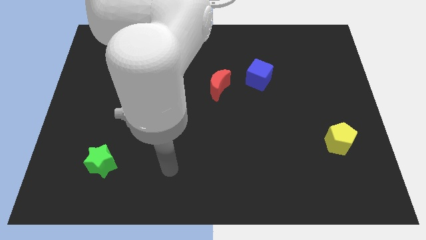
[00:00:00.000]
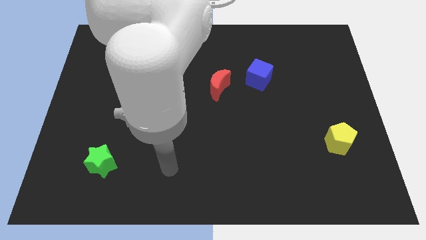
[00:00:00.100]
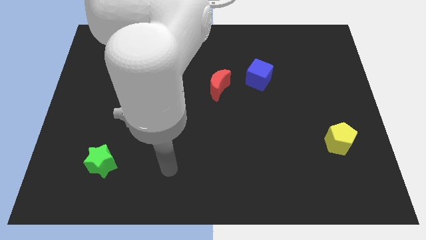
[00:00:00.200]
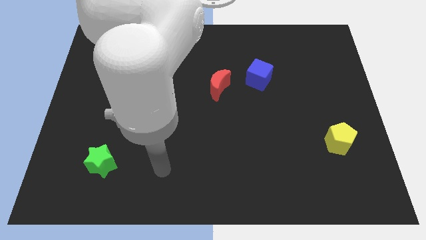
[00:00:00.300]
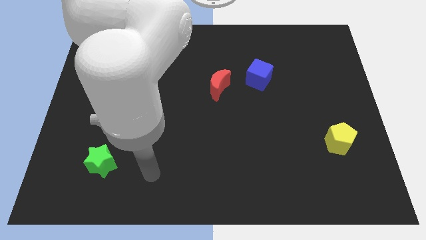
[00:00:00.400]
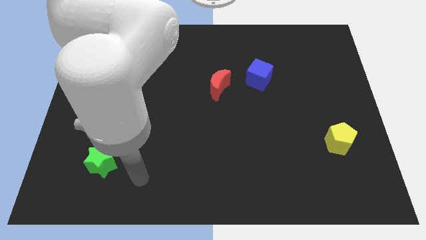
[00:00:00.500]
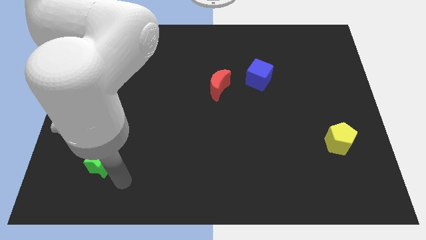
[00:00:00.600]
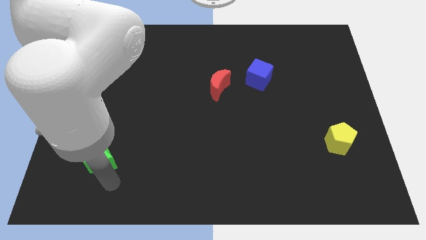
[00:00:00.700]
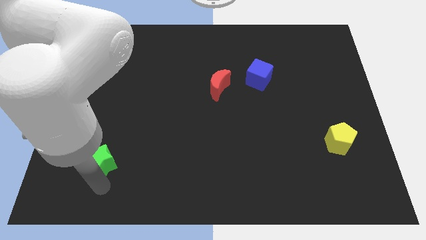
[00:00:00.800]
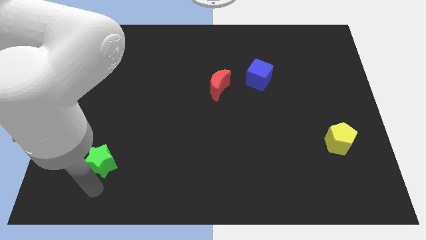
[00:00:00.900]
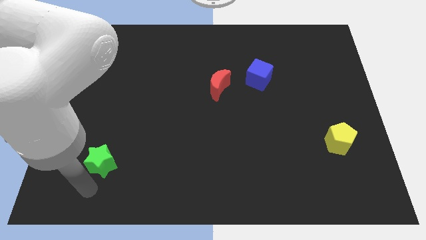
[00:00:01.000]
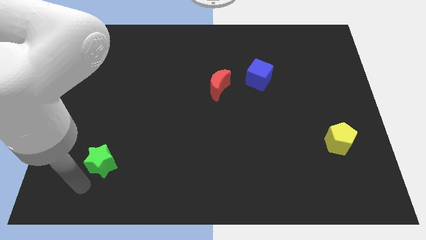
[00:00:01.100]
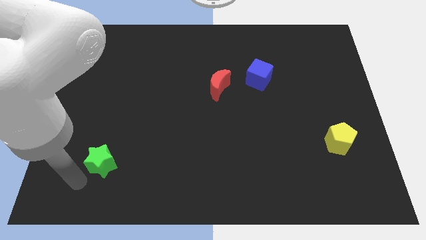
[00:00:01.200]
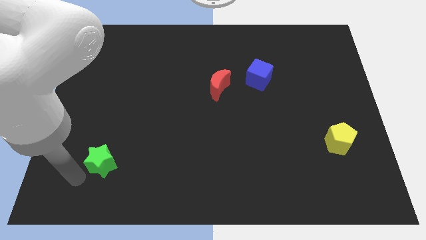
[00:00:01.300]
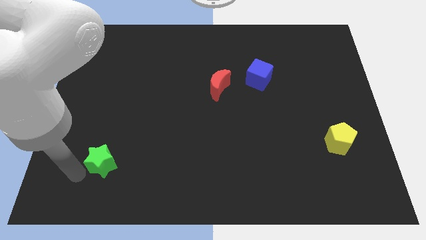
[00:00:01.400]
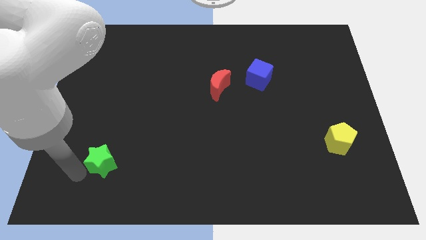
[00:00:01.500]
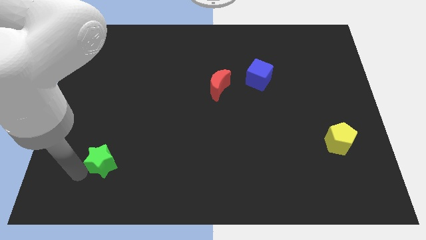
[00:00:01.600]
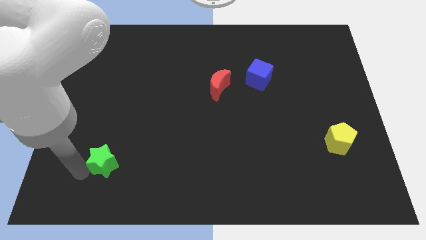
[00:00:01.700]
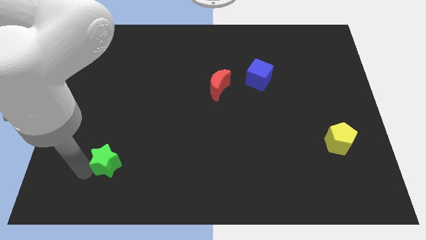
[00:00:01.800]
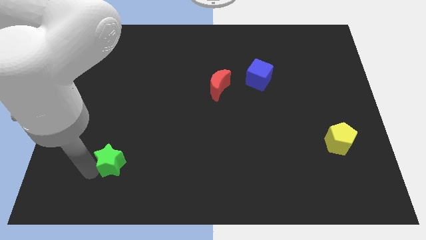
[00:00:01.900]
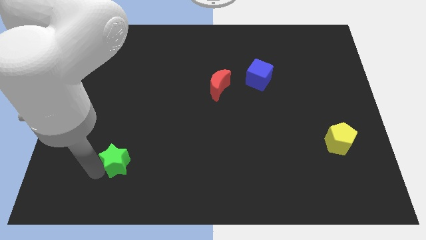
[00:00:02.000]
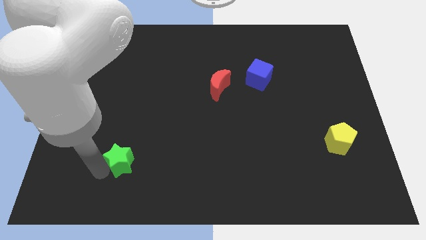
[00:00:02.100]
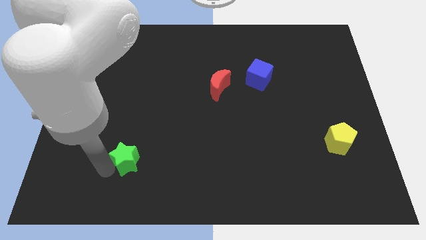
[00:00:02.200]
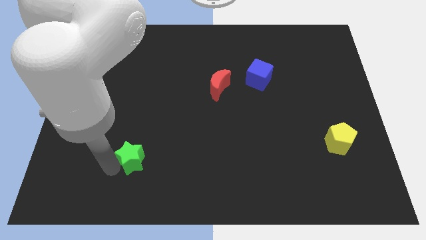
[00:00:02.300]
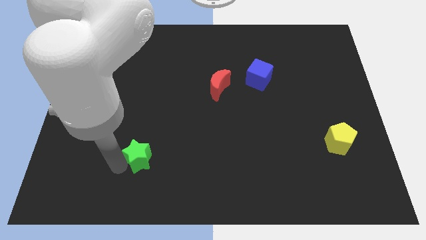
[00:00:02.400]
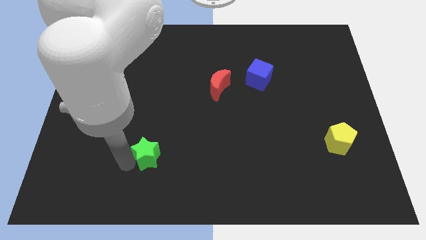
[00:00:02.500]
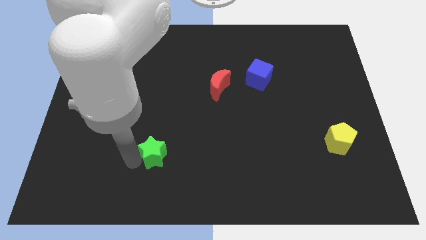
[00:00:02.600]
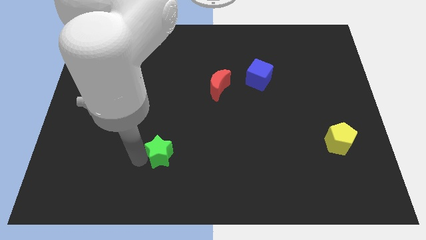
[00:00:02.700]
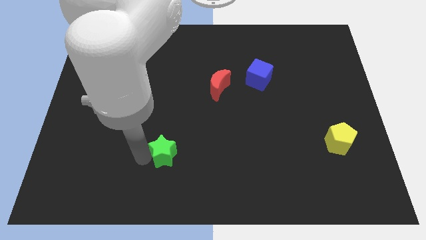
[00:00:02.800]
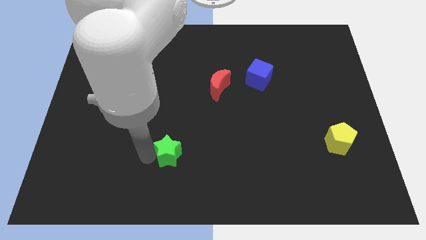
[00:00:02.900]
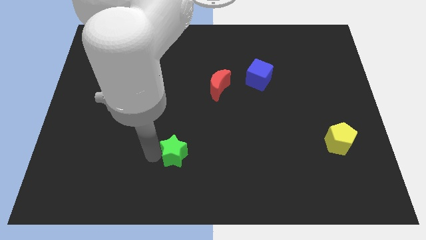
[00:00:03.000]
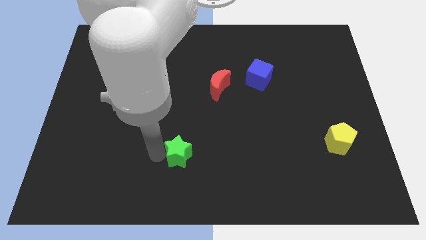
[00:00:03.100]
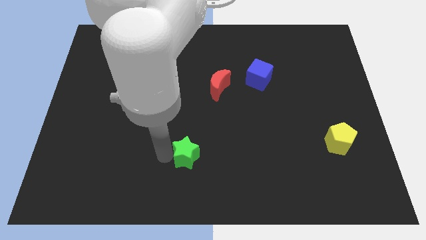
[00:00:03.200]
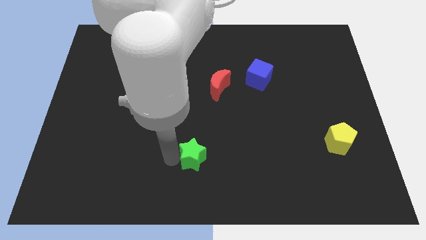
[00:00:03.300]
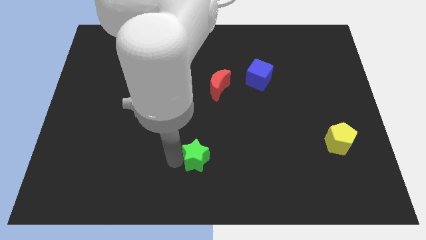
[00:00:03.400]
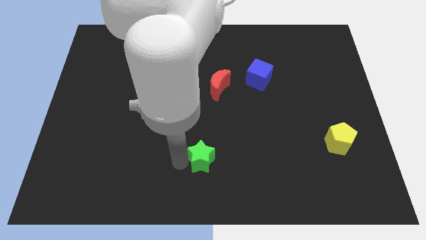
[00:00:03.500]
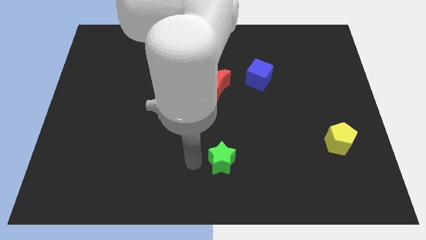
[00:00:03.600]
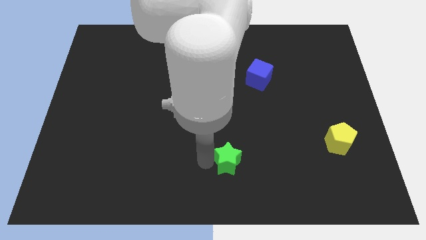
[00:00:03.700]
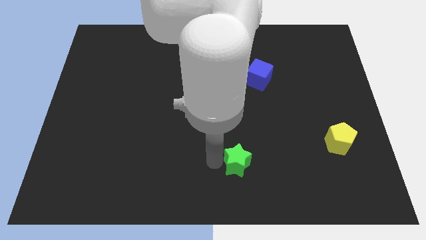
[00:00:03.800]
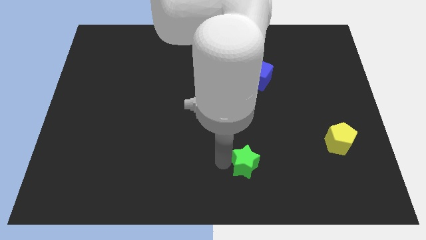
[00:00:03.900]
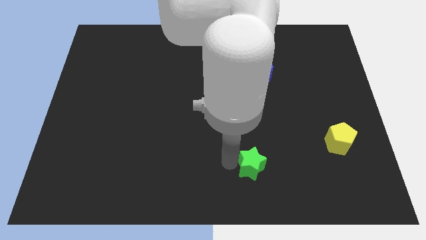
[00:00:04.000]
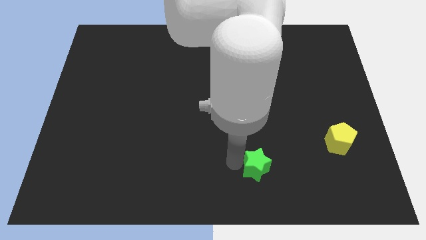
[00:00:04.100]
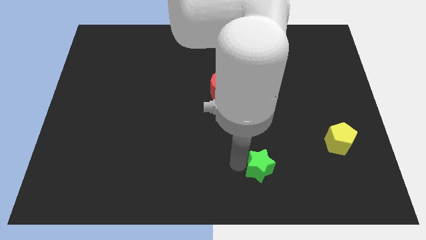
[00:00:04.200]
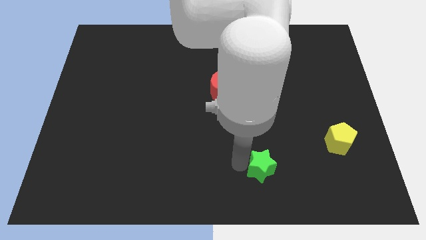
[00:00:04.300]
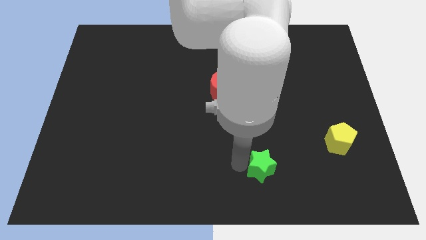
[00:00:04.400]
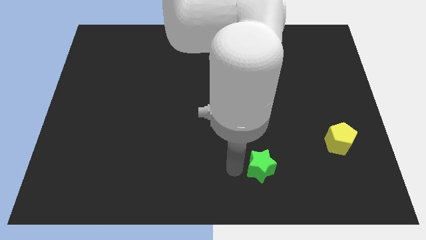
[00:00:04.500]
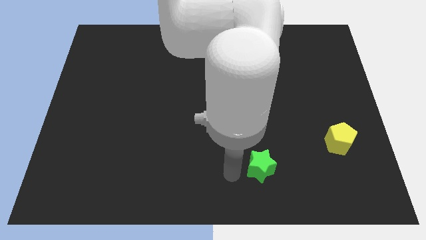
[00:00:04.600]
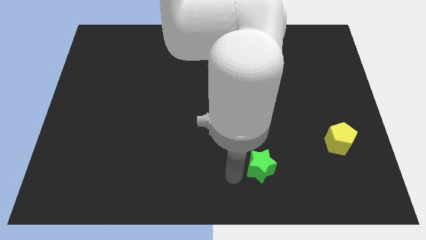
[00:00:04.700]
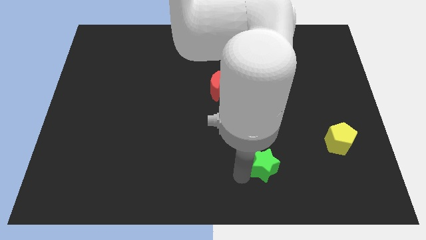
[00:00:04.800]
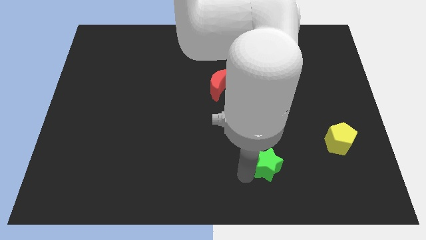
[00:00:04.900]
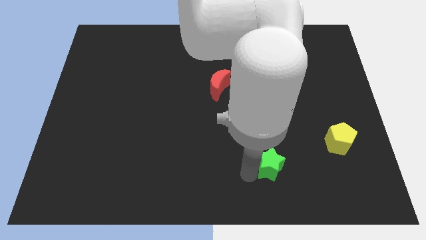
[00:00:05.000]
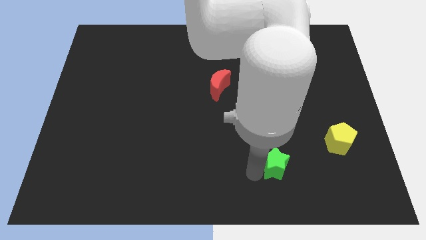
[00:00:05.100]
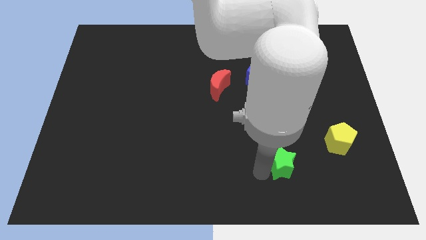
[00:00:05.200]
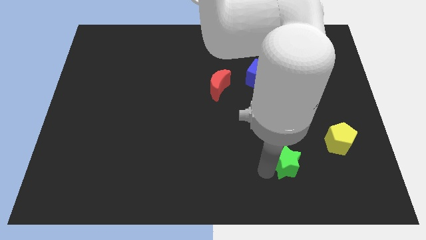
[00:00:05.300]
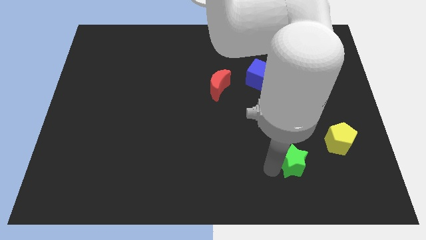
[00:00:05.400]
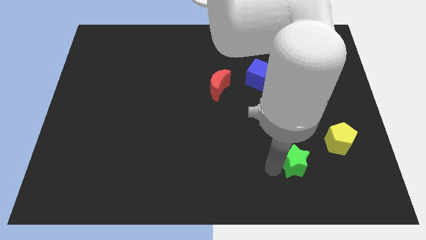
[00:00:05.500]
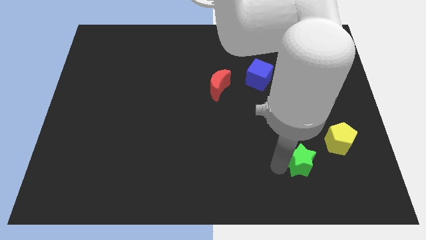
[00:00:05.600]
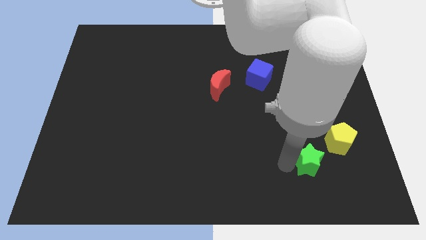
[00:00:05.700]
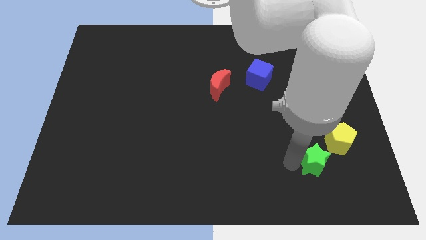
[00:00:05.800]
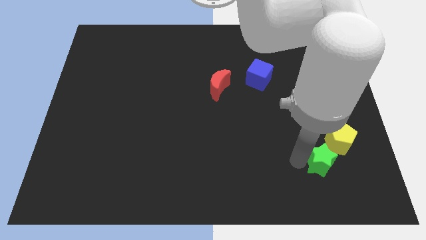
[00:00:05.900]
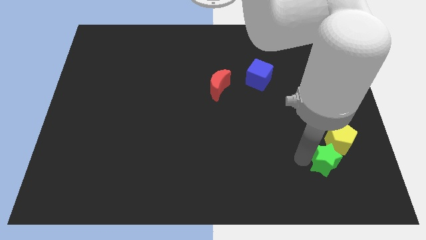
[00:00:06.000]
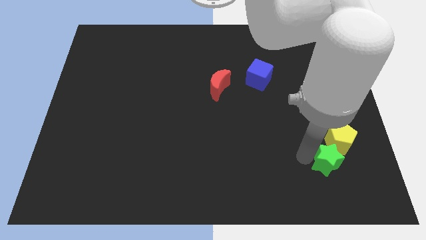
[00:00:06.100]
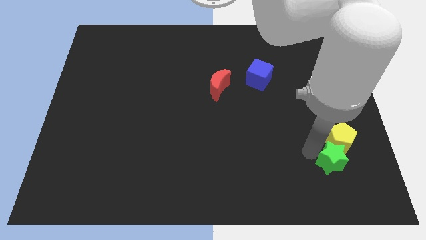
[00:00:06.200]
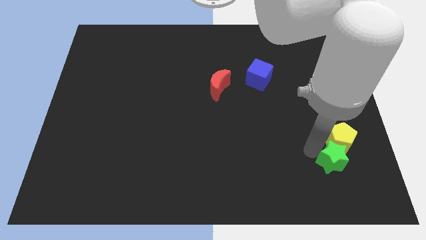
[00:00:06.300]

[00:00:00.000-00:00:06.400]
put the green star close to the yellow block

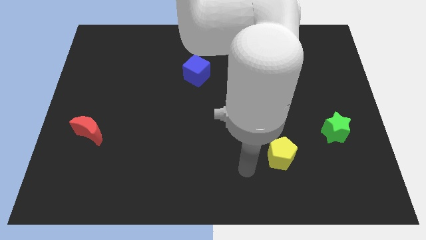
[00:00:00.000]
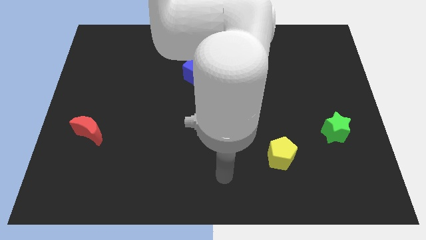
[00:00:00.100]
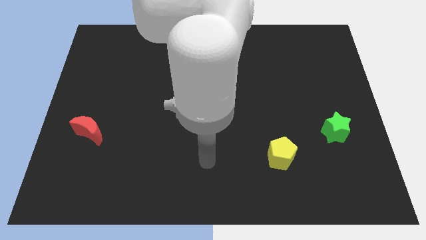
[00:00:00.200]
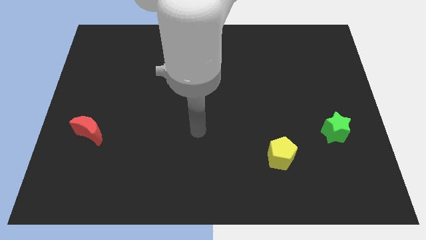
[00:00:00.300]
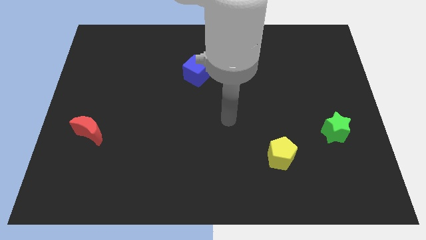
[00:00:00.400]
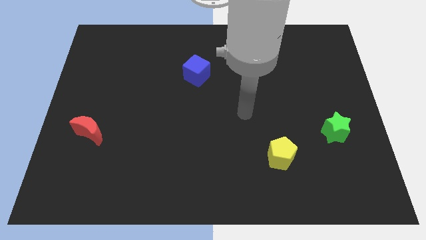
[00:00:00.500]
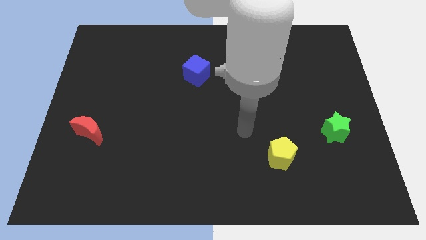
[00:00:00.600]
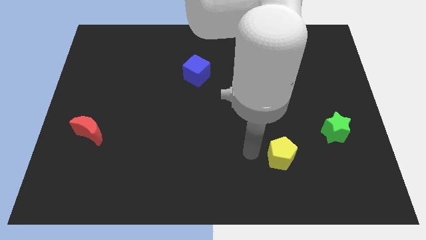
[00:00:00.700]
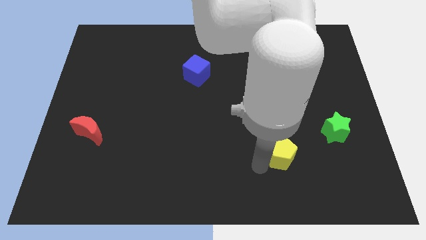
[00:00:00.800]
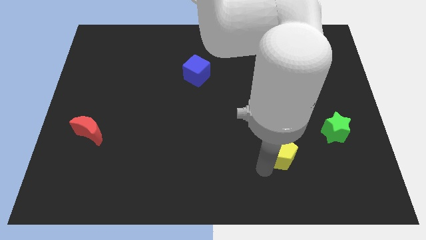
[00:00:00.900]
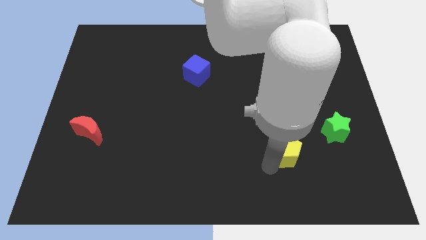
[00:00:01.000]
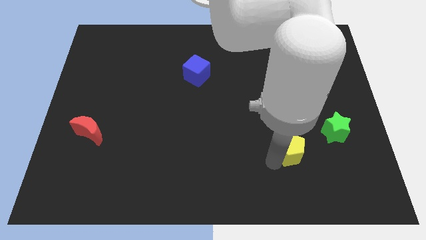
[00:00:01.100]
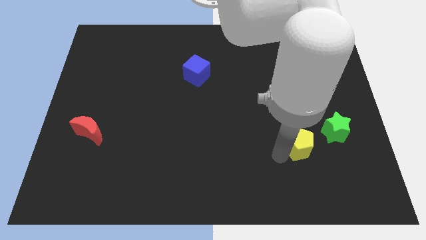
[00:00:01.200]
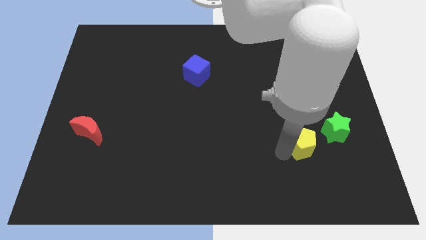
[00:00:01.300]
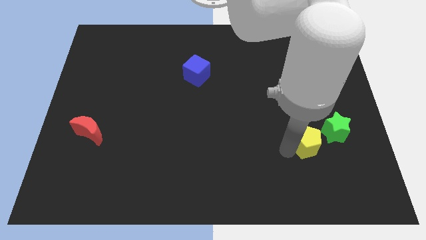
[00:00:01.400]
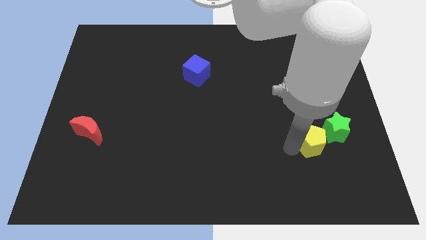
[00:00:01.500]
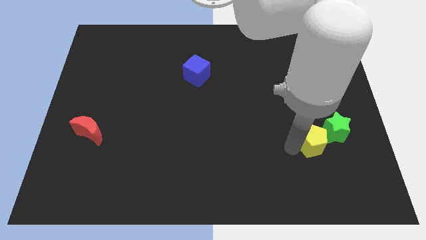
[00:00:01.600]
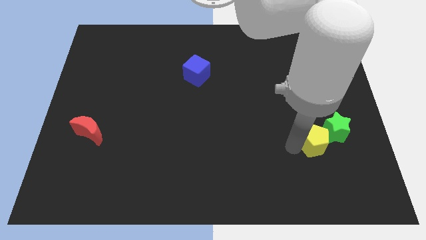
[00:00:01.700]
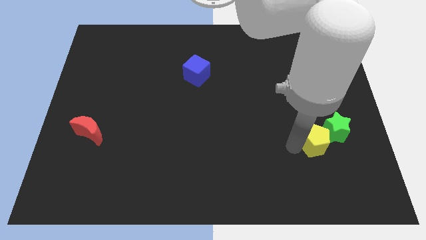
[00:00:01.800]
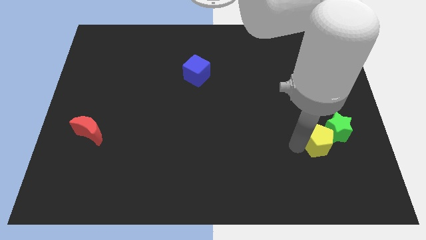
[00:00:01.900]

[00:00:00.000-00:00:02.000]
move the pentagon towards the star

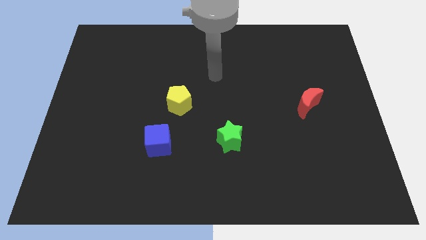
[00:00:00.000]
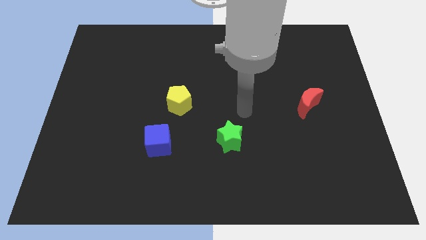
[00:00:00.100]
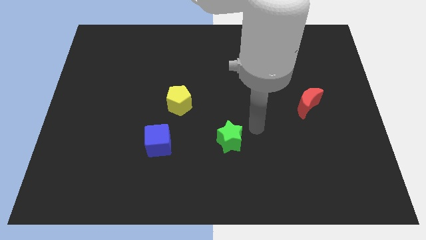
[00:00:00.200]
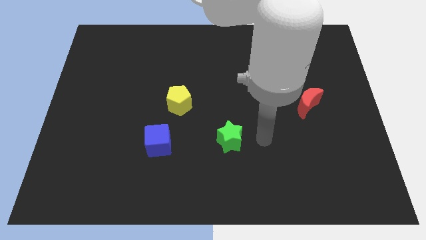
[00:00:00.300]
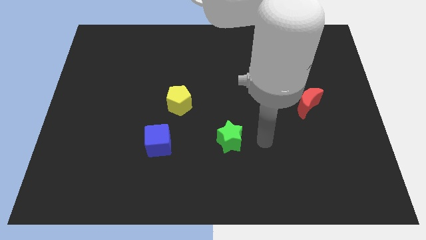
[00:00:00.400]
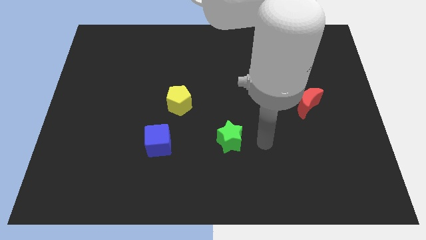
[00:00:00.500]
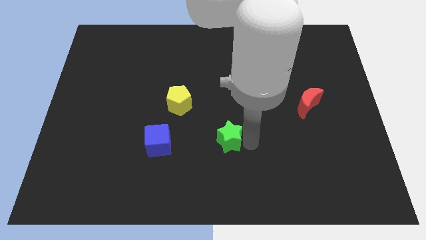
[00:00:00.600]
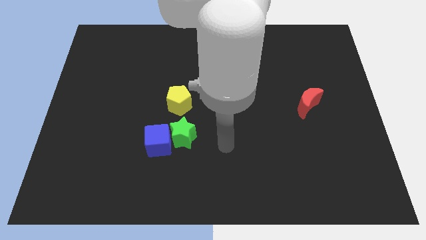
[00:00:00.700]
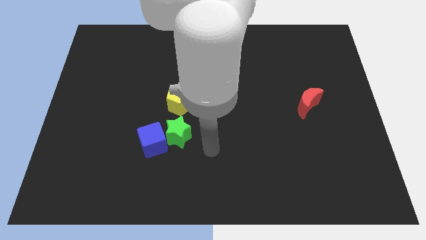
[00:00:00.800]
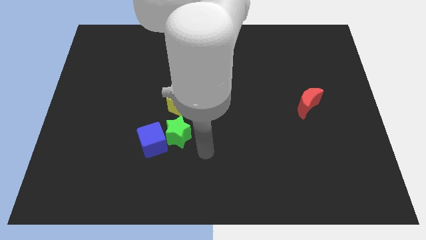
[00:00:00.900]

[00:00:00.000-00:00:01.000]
put the green block towards the blue cube
